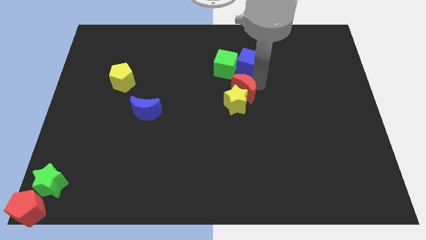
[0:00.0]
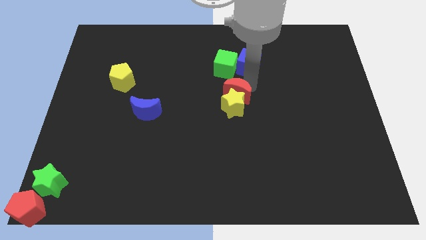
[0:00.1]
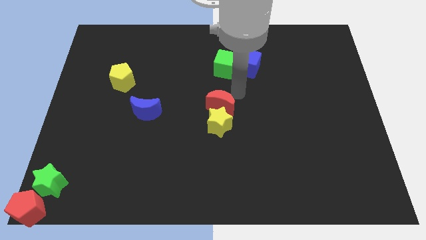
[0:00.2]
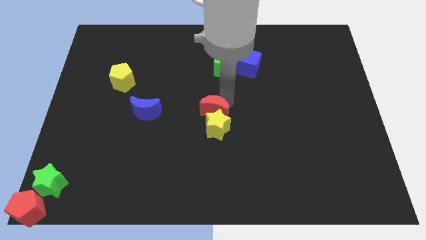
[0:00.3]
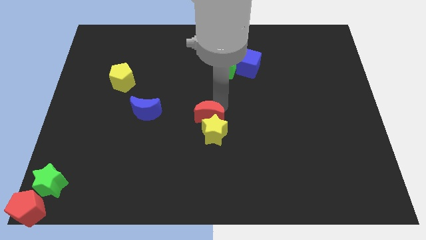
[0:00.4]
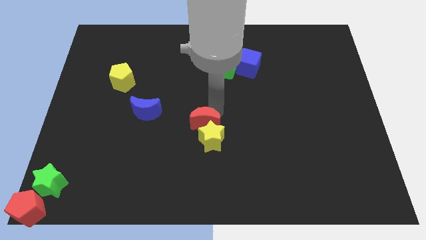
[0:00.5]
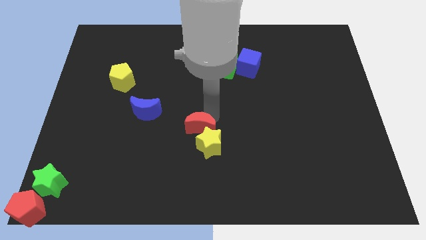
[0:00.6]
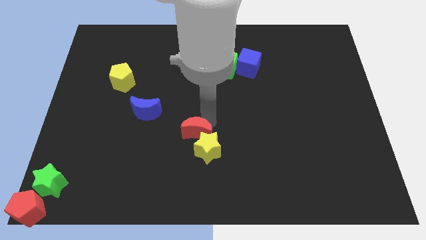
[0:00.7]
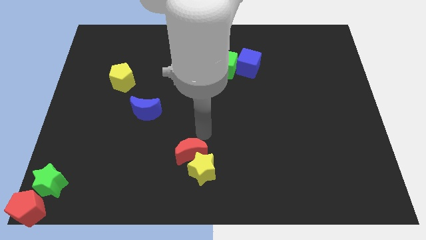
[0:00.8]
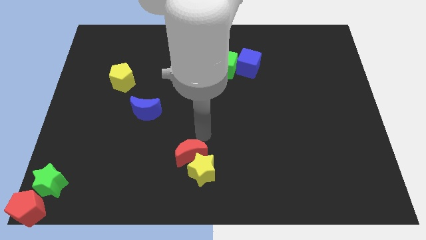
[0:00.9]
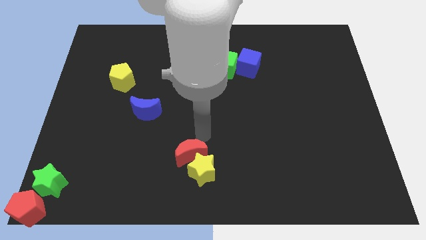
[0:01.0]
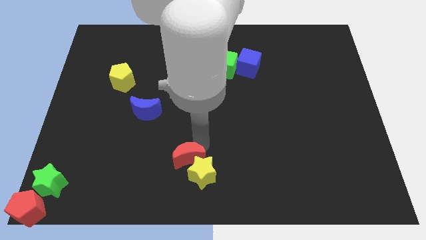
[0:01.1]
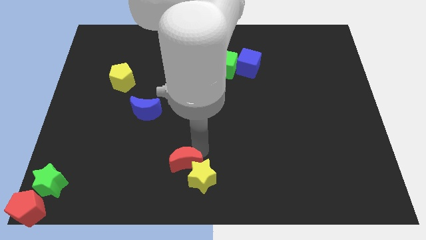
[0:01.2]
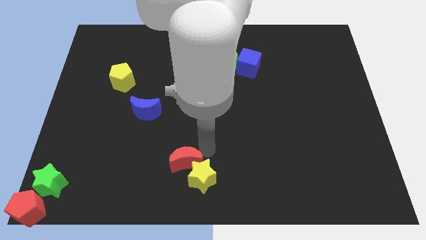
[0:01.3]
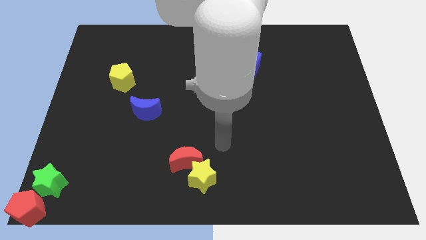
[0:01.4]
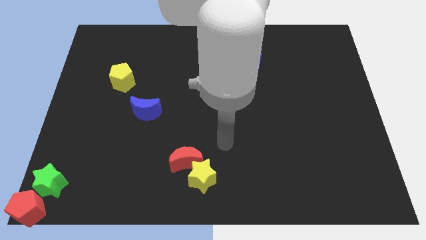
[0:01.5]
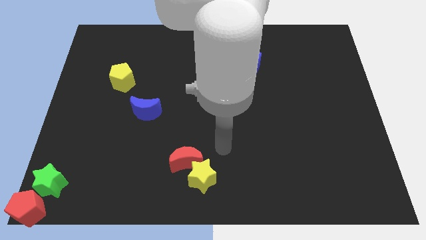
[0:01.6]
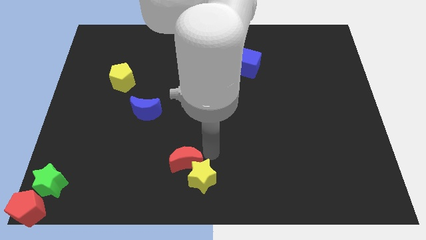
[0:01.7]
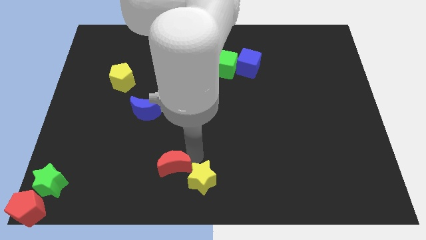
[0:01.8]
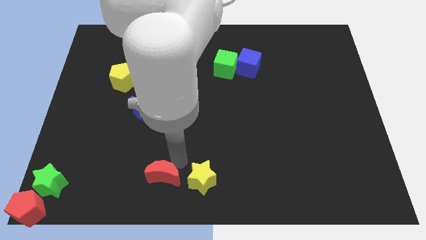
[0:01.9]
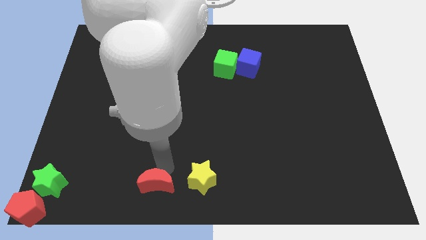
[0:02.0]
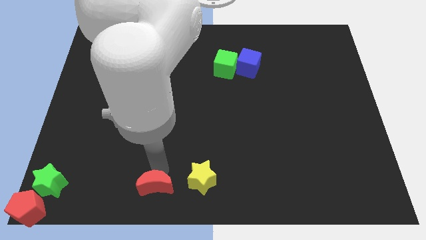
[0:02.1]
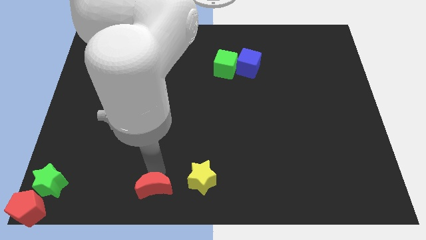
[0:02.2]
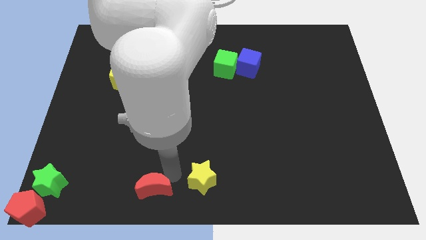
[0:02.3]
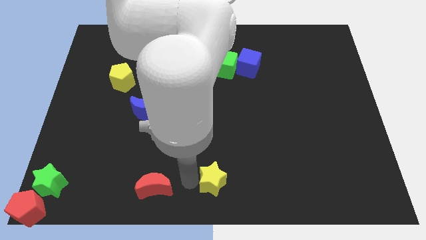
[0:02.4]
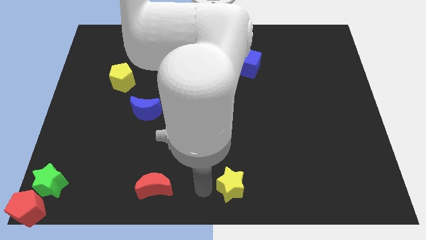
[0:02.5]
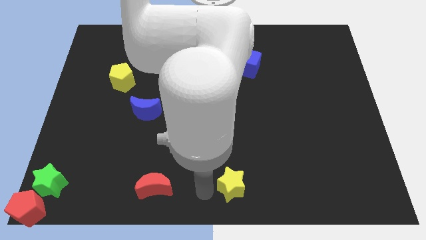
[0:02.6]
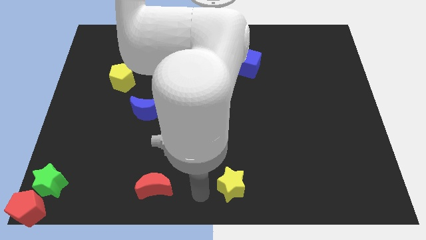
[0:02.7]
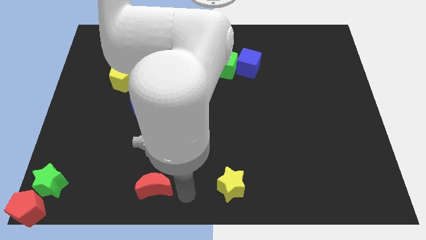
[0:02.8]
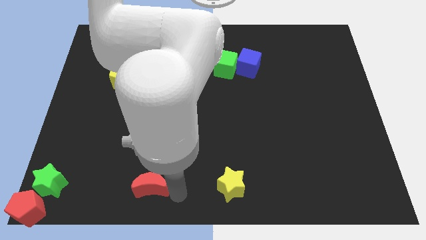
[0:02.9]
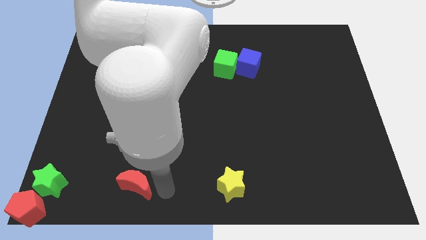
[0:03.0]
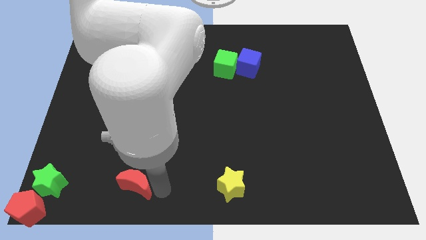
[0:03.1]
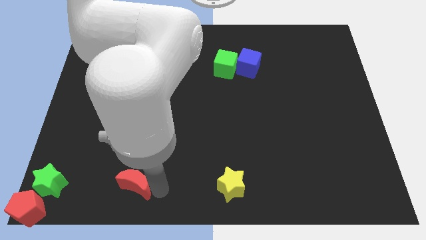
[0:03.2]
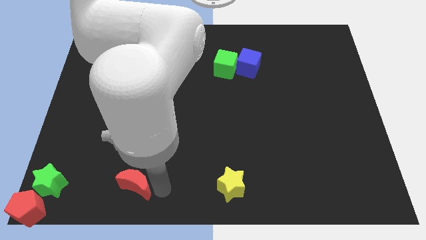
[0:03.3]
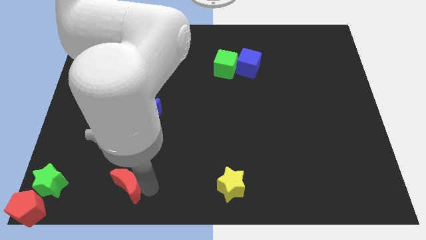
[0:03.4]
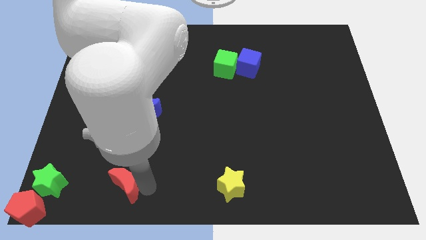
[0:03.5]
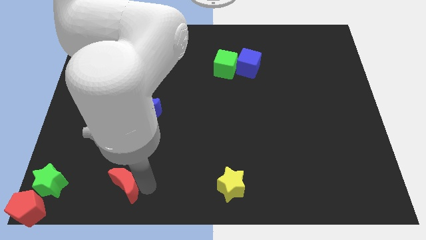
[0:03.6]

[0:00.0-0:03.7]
place the red moon and yellow star in a horizontal line

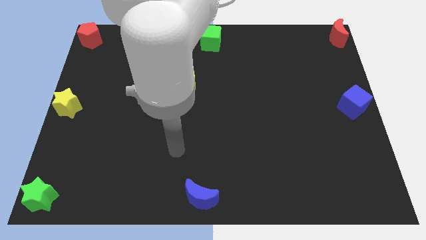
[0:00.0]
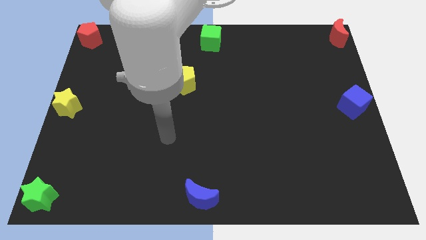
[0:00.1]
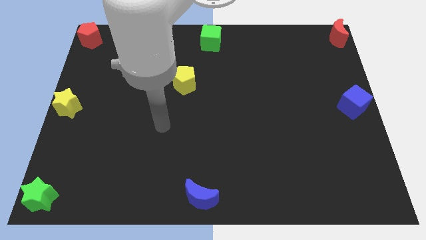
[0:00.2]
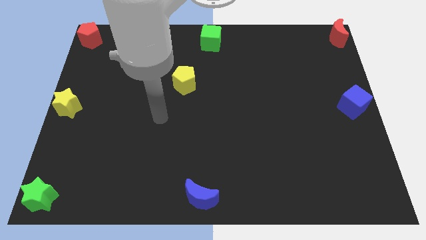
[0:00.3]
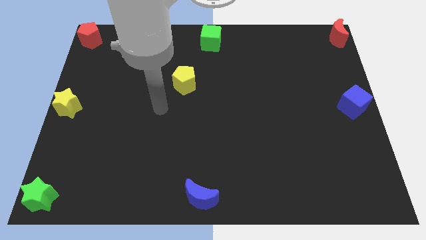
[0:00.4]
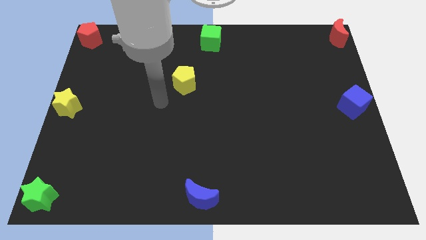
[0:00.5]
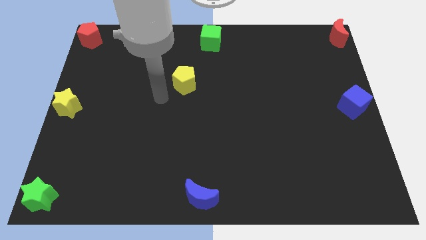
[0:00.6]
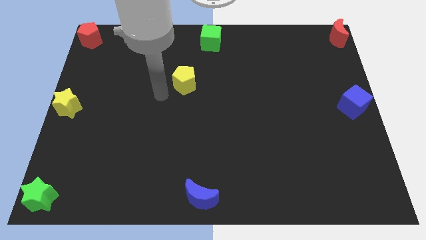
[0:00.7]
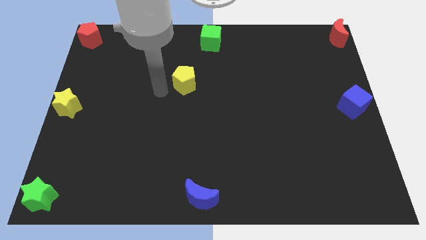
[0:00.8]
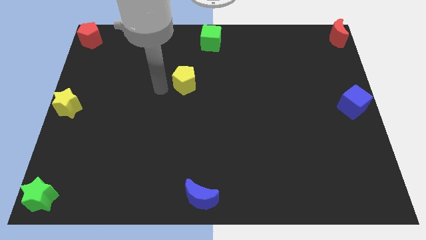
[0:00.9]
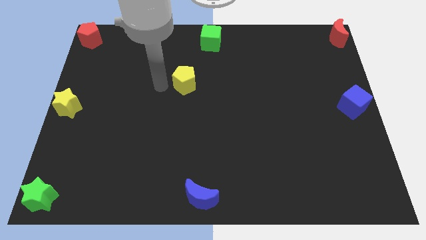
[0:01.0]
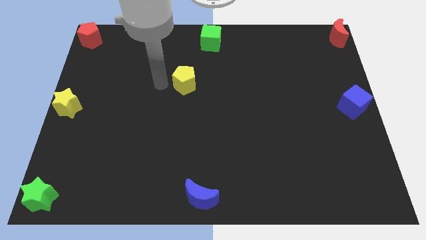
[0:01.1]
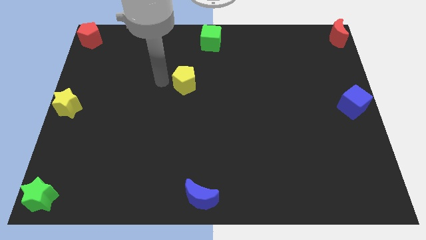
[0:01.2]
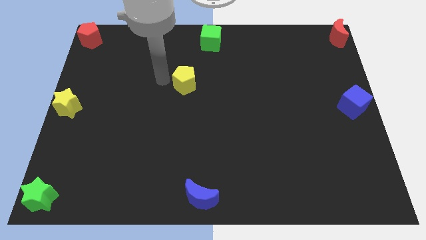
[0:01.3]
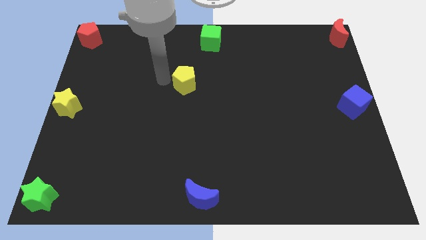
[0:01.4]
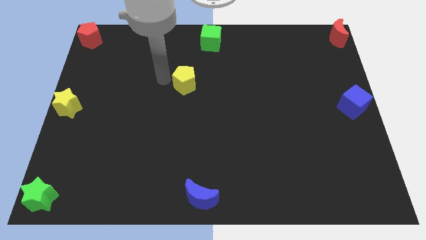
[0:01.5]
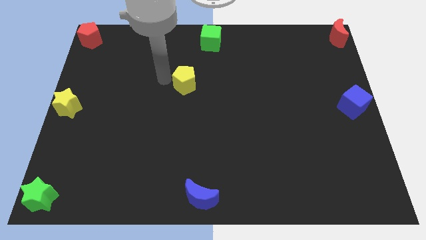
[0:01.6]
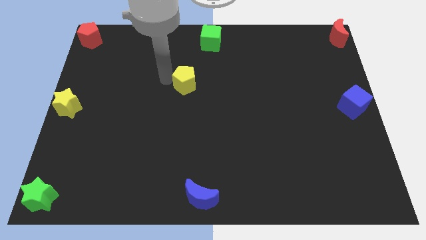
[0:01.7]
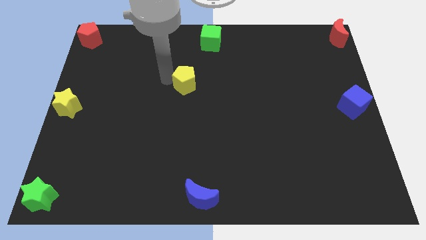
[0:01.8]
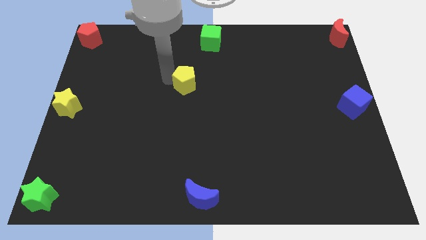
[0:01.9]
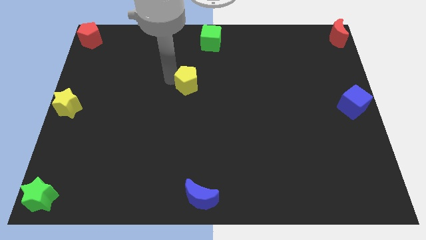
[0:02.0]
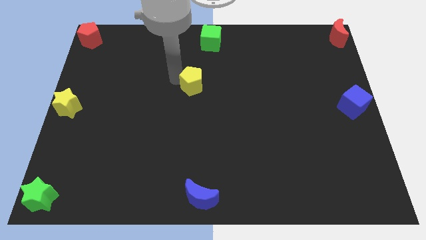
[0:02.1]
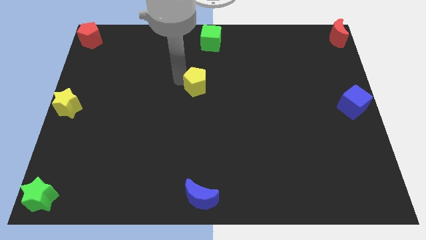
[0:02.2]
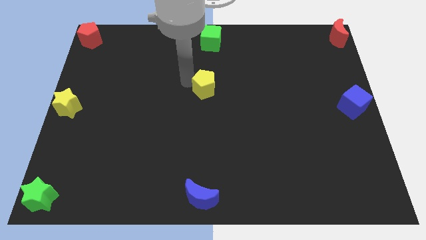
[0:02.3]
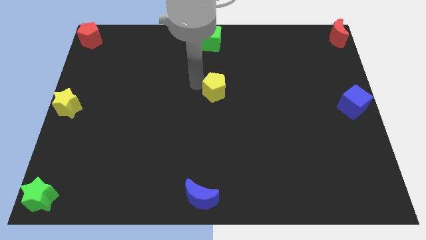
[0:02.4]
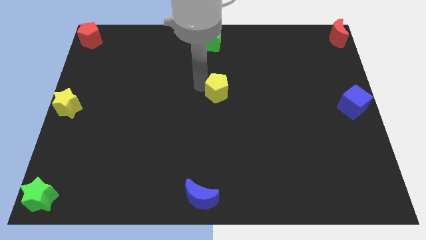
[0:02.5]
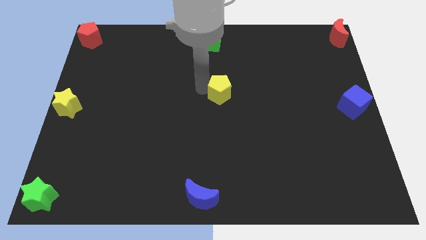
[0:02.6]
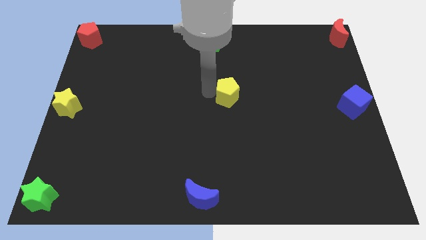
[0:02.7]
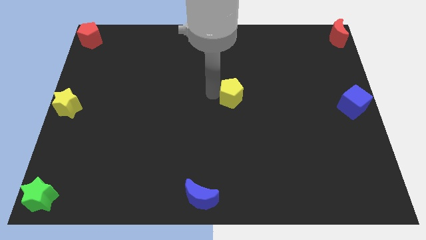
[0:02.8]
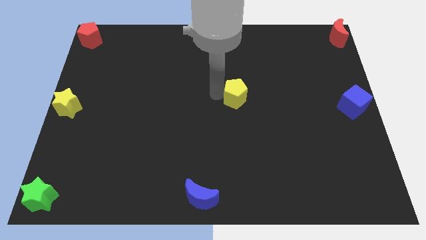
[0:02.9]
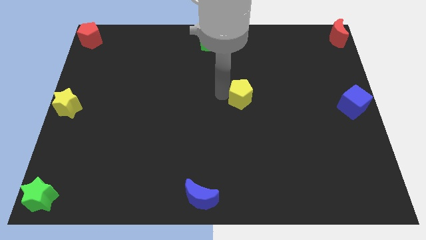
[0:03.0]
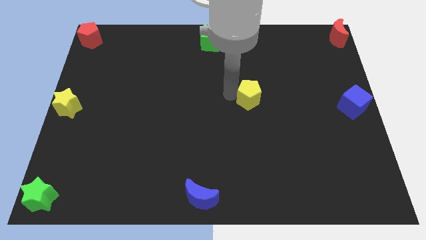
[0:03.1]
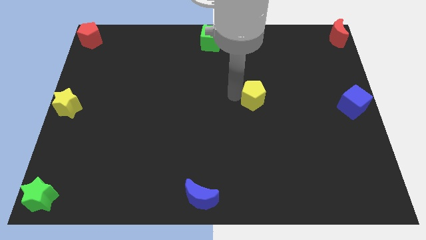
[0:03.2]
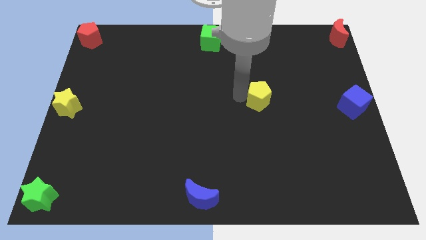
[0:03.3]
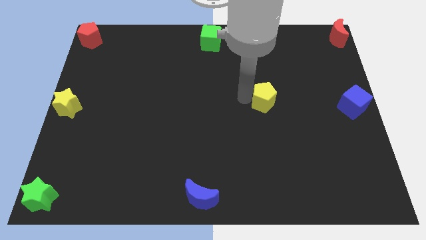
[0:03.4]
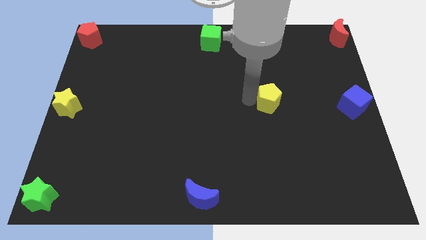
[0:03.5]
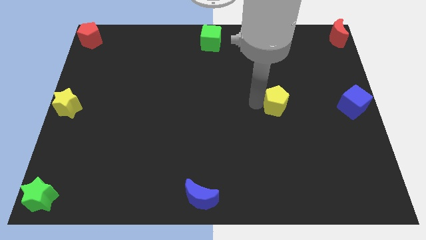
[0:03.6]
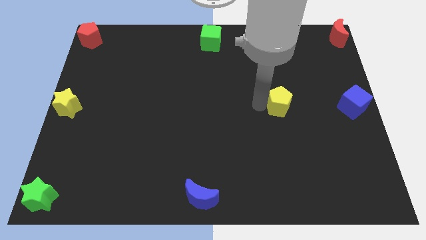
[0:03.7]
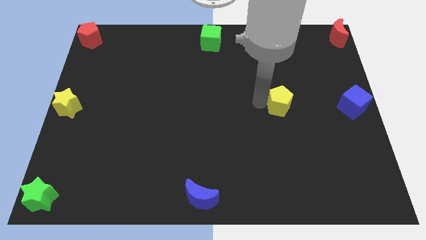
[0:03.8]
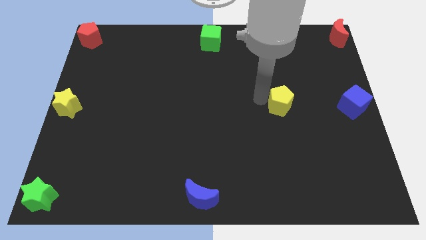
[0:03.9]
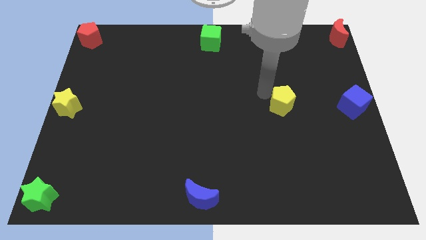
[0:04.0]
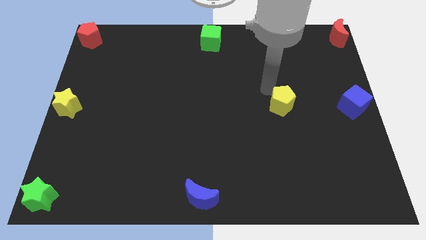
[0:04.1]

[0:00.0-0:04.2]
push the yellow pentagon towards the blue cube

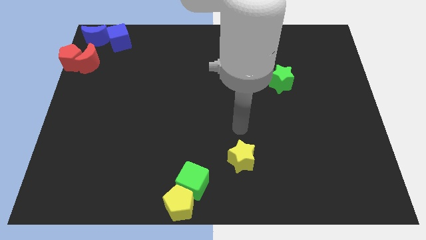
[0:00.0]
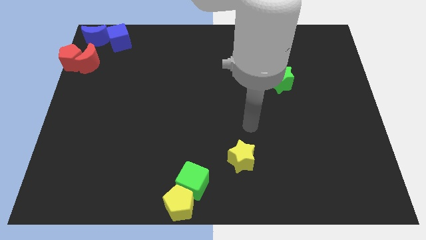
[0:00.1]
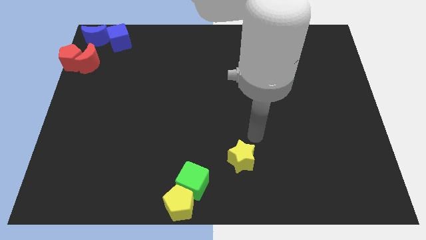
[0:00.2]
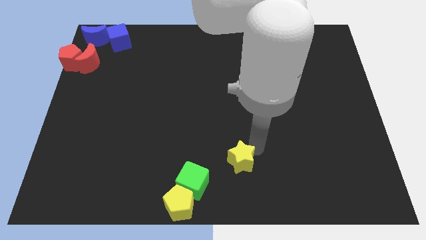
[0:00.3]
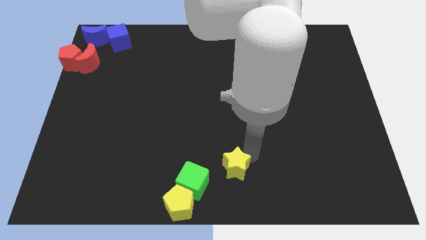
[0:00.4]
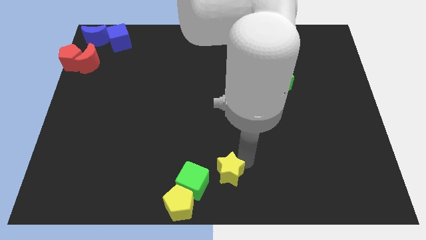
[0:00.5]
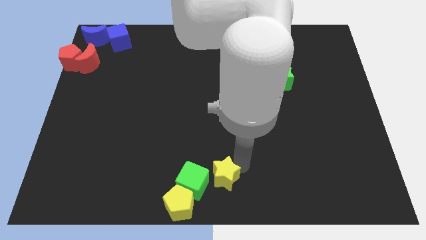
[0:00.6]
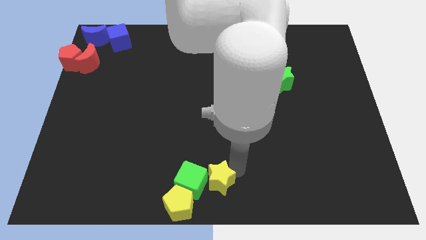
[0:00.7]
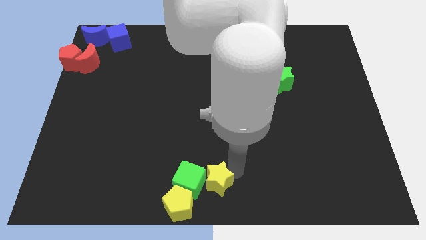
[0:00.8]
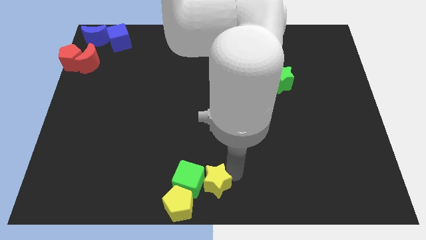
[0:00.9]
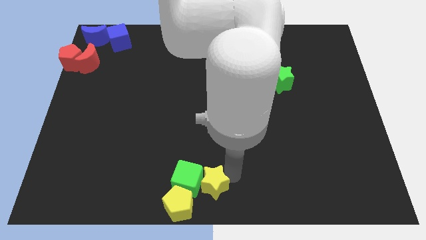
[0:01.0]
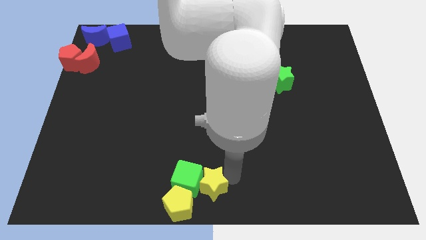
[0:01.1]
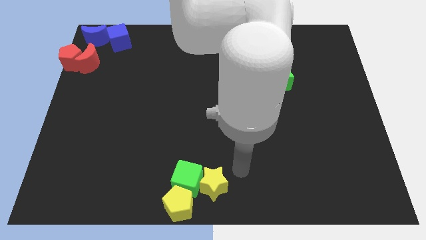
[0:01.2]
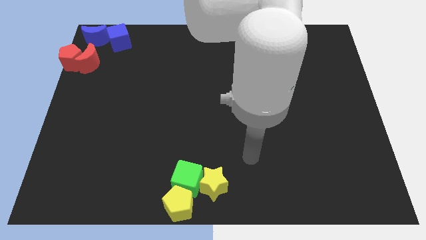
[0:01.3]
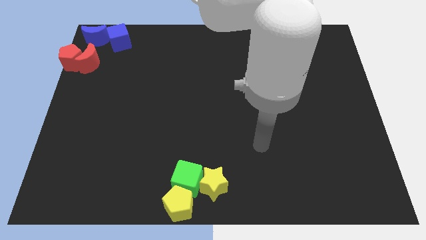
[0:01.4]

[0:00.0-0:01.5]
move the yellow star into the green cube
